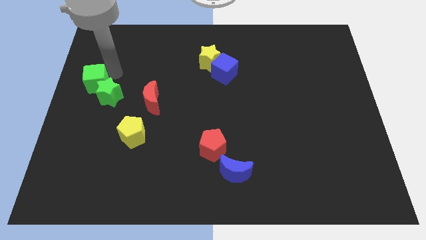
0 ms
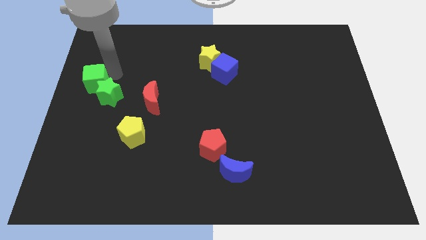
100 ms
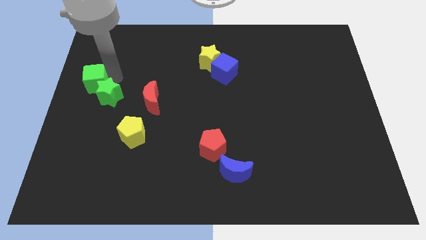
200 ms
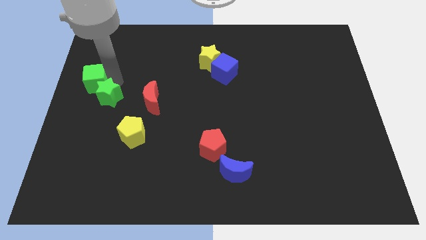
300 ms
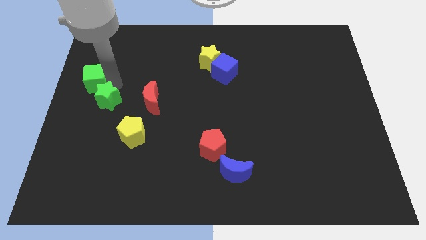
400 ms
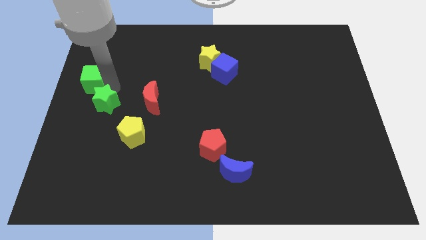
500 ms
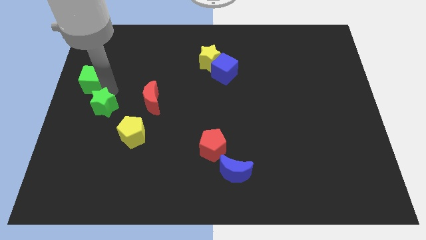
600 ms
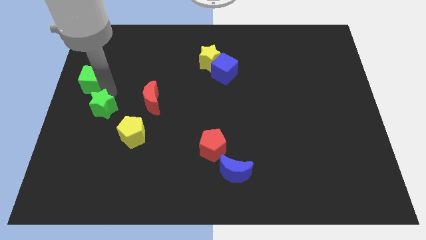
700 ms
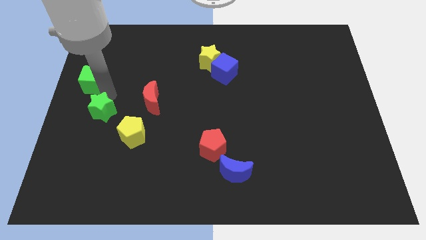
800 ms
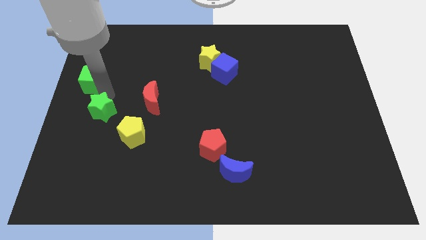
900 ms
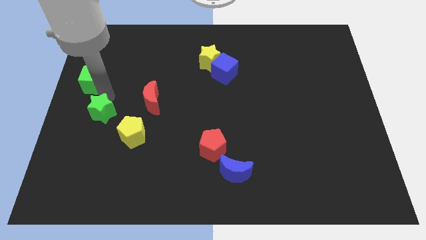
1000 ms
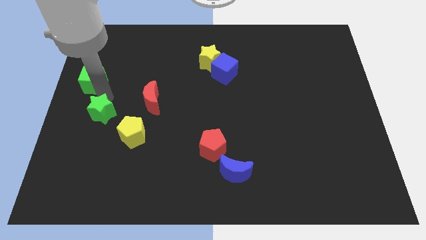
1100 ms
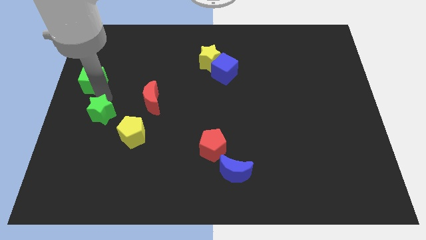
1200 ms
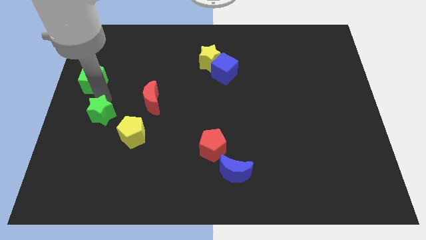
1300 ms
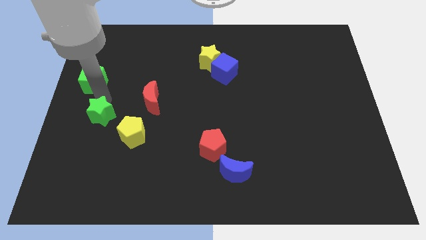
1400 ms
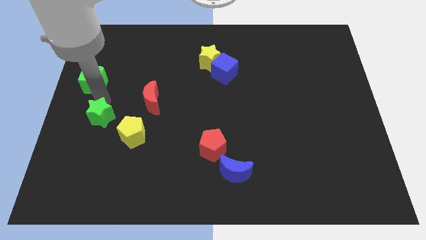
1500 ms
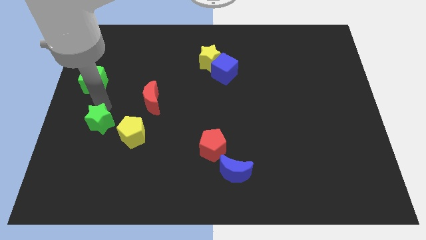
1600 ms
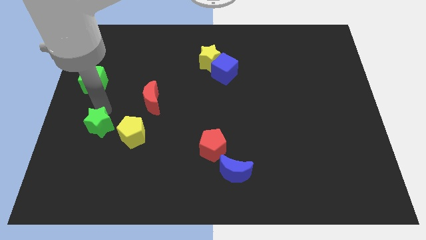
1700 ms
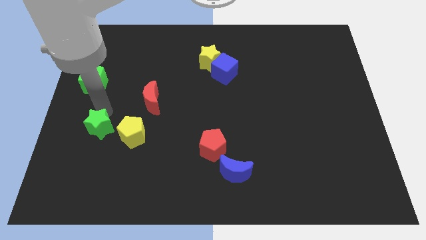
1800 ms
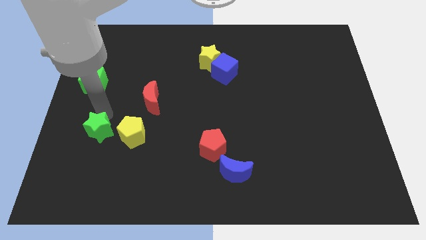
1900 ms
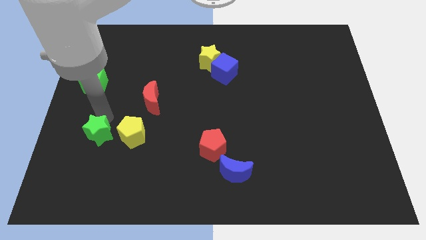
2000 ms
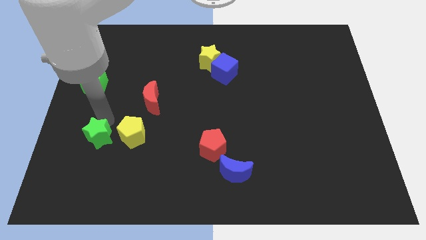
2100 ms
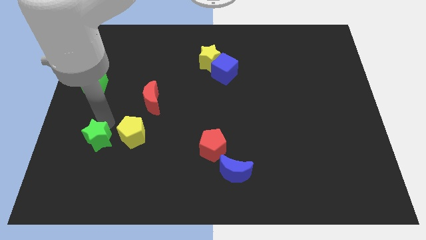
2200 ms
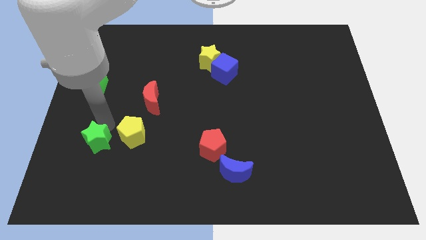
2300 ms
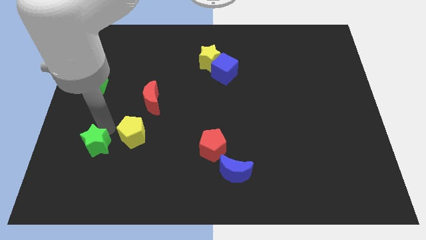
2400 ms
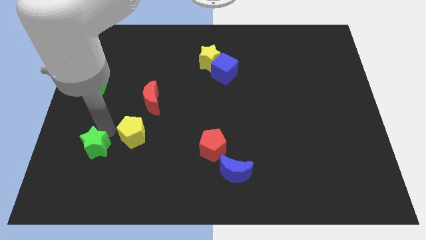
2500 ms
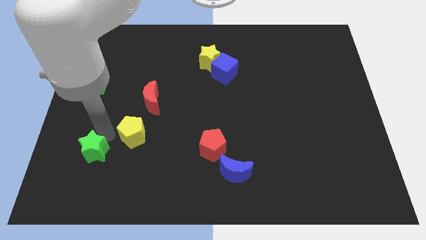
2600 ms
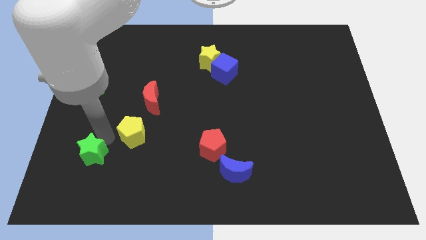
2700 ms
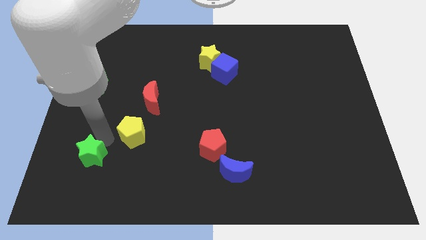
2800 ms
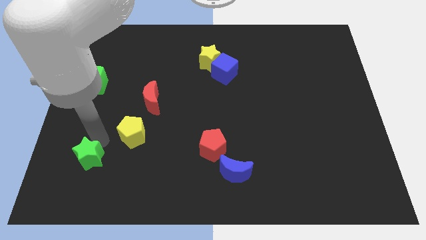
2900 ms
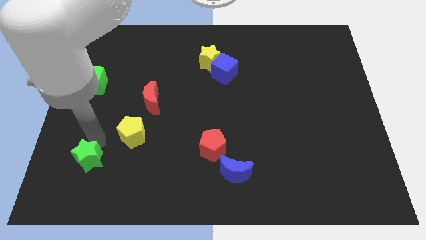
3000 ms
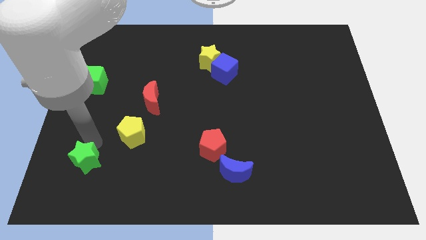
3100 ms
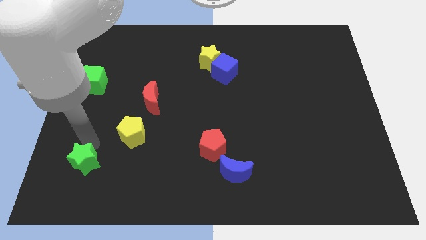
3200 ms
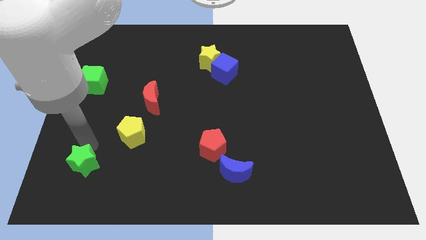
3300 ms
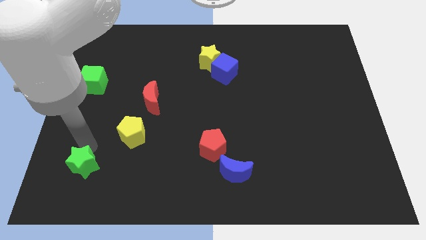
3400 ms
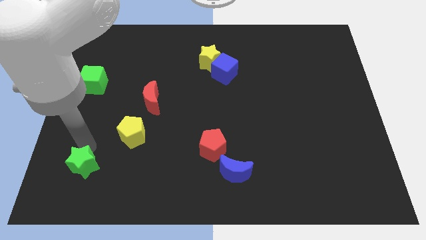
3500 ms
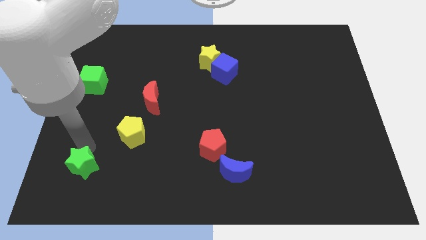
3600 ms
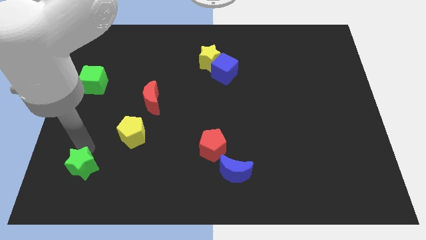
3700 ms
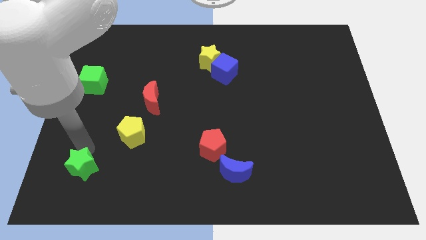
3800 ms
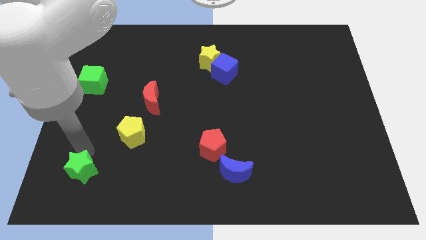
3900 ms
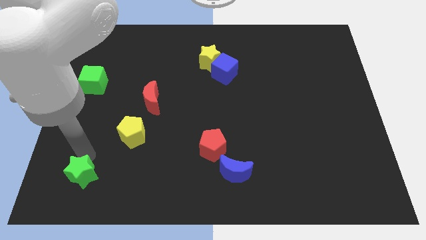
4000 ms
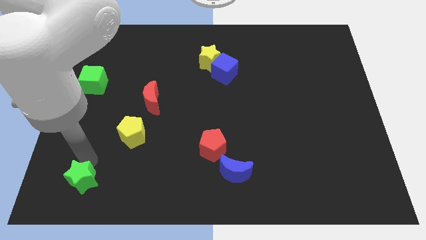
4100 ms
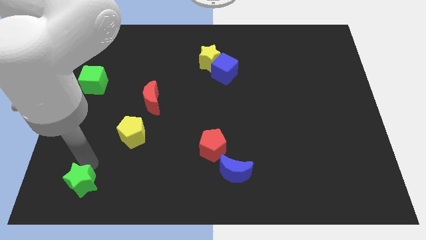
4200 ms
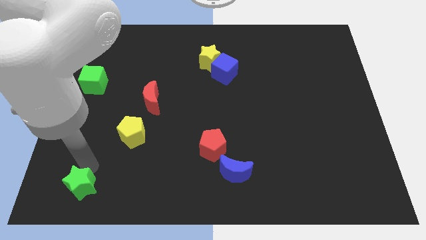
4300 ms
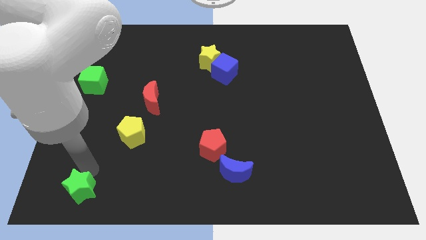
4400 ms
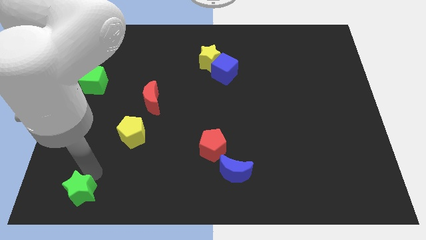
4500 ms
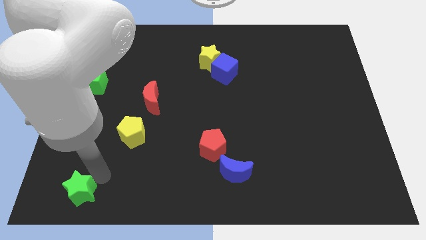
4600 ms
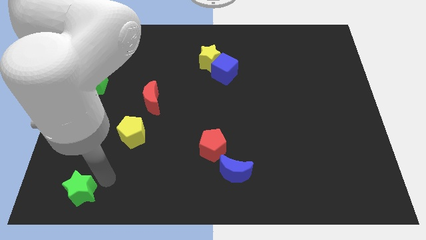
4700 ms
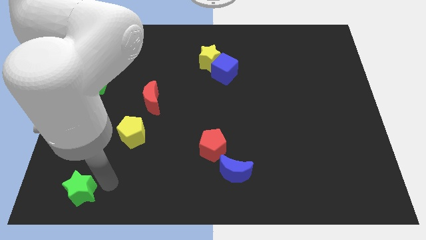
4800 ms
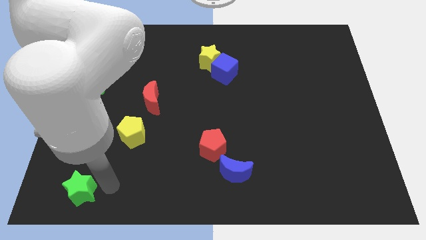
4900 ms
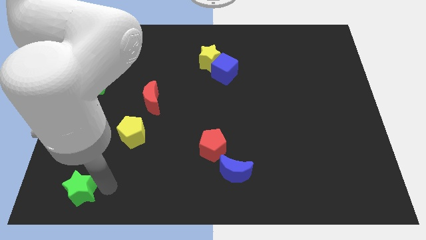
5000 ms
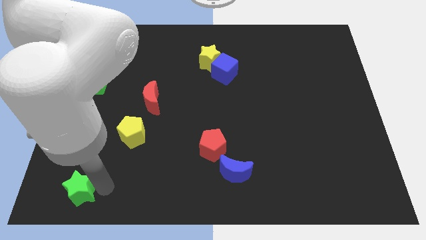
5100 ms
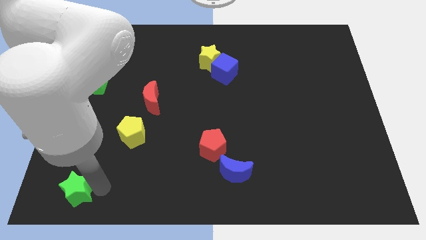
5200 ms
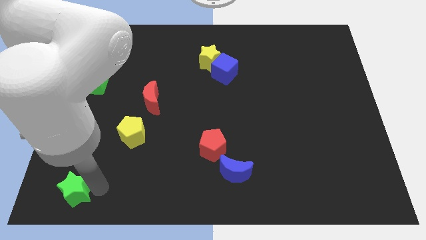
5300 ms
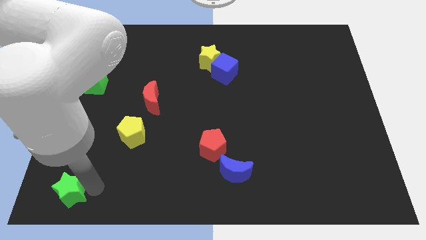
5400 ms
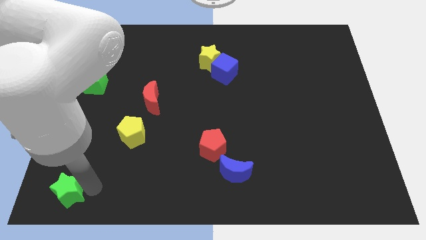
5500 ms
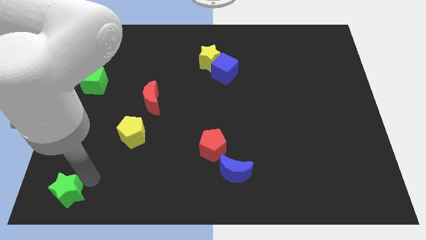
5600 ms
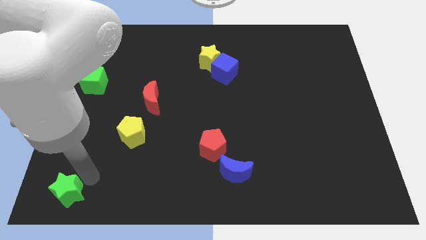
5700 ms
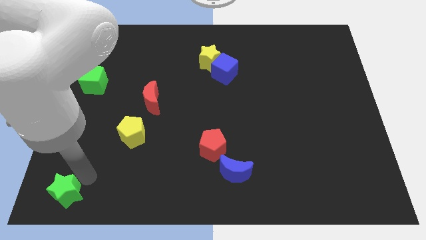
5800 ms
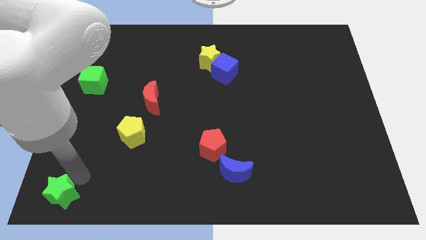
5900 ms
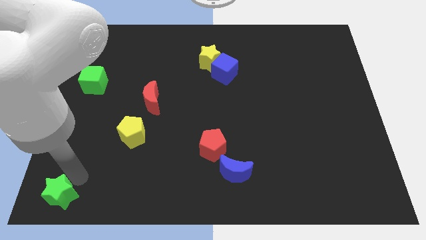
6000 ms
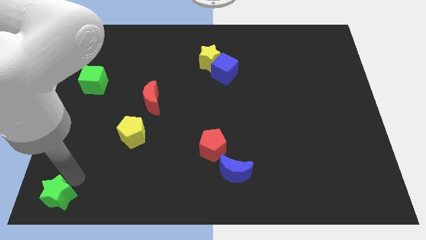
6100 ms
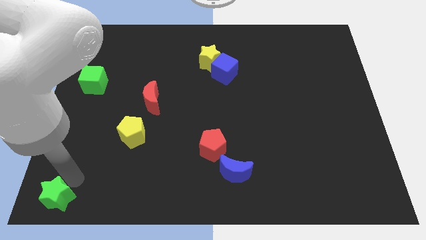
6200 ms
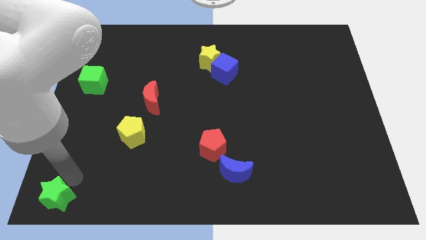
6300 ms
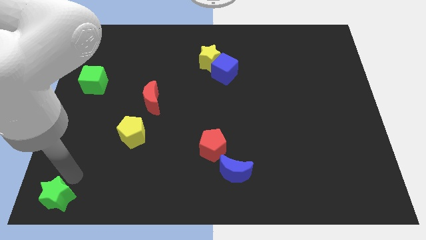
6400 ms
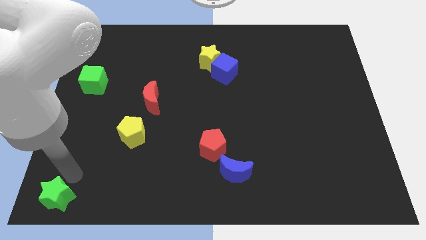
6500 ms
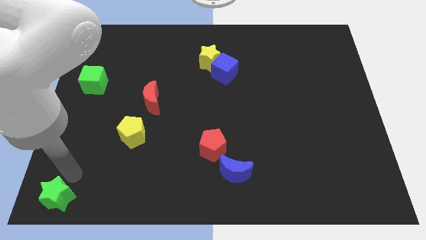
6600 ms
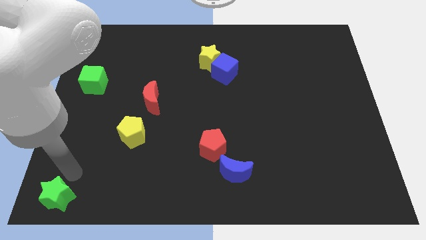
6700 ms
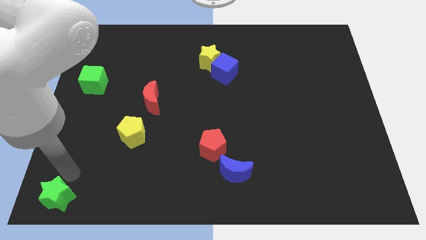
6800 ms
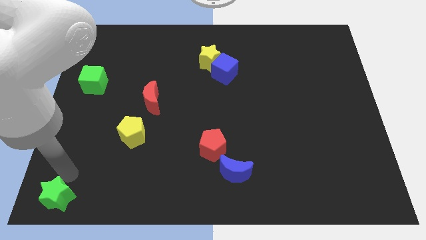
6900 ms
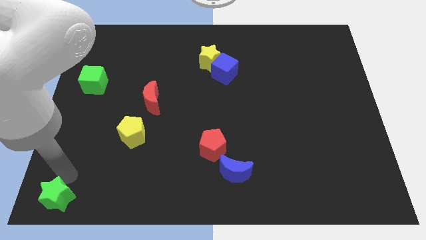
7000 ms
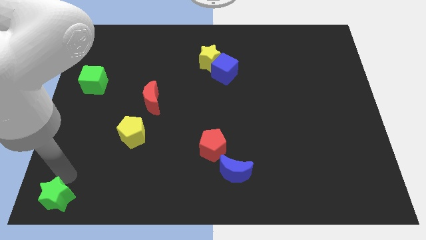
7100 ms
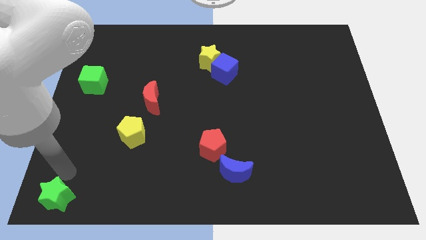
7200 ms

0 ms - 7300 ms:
push the green star to the left bottom

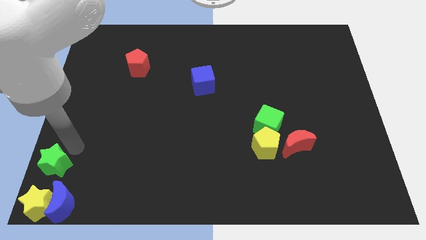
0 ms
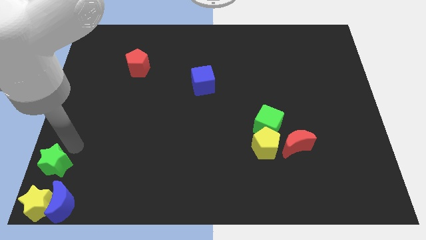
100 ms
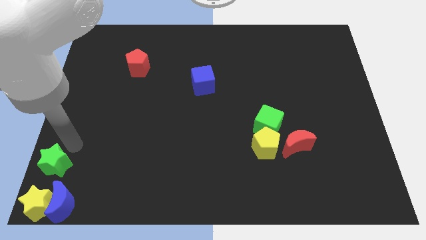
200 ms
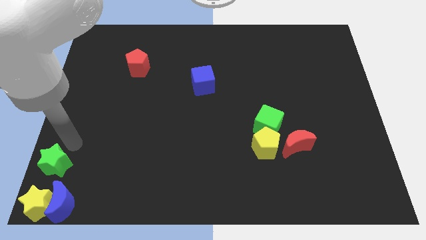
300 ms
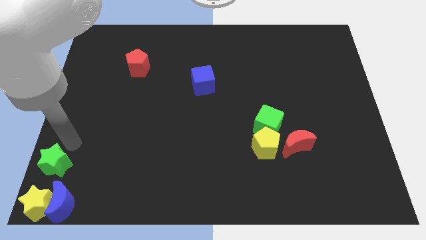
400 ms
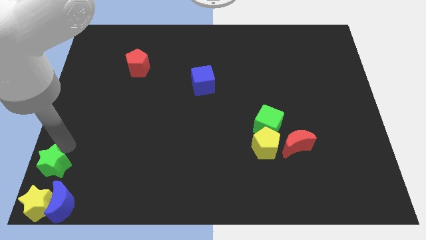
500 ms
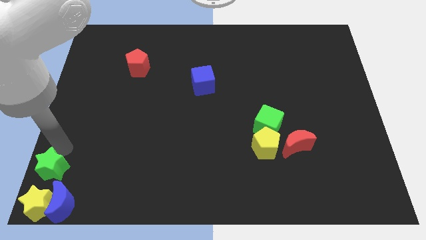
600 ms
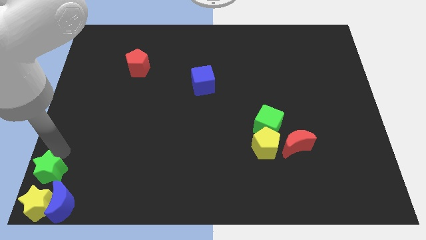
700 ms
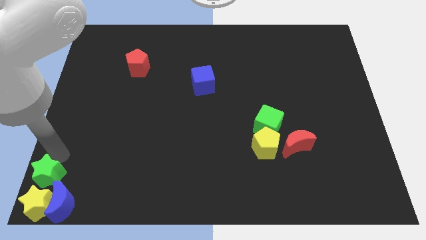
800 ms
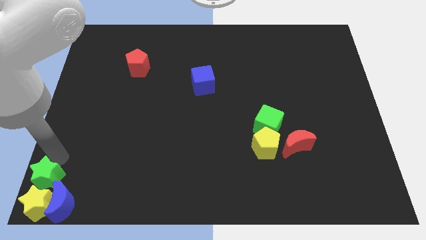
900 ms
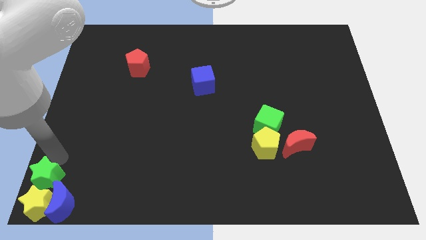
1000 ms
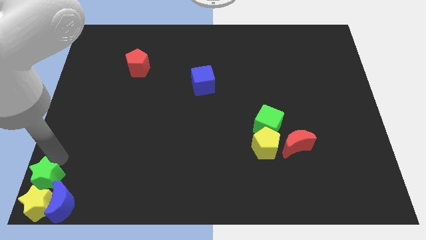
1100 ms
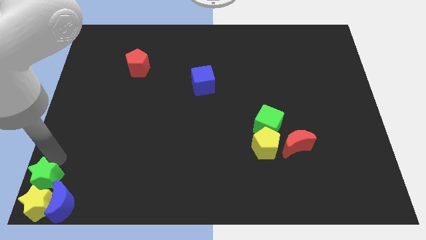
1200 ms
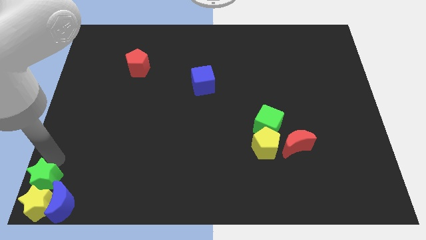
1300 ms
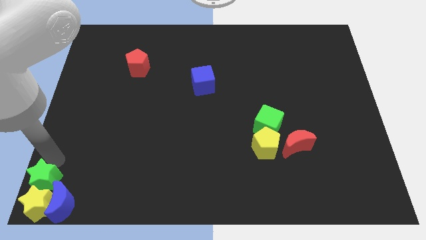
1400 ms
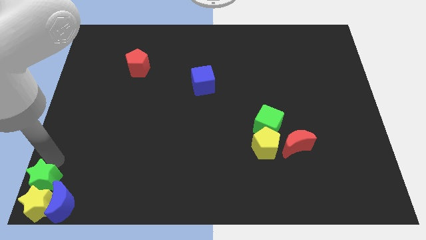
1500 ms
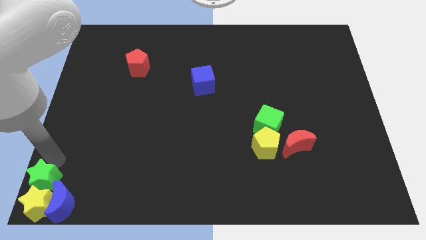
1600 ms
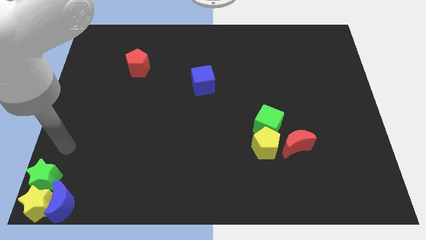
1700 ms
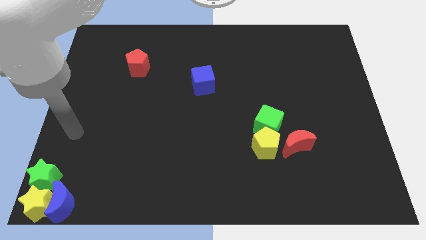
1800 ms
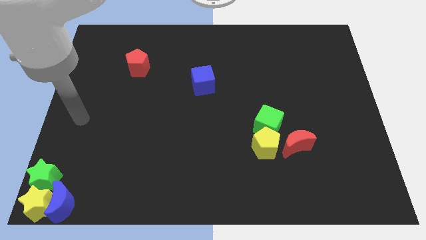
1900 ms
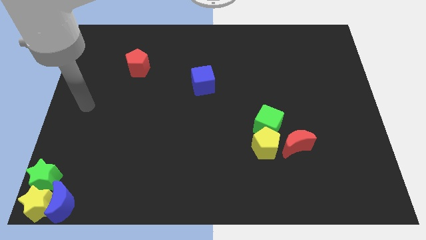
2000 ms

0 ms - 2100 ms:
move the green star into yellow star
